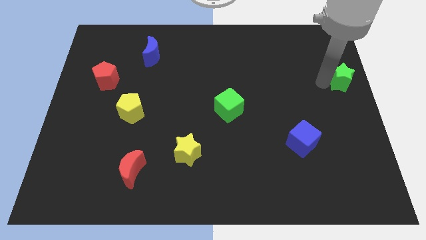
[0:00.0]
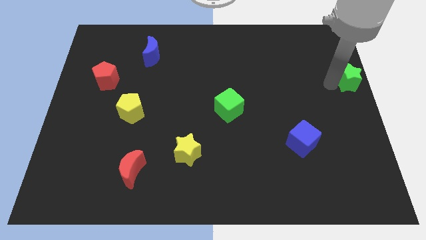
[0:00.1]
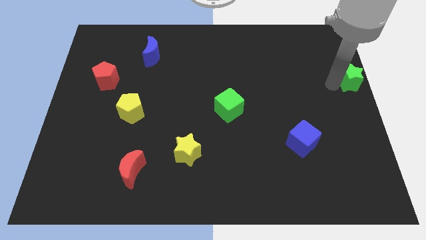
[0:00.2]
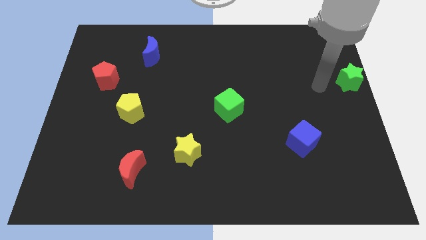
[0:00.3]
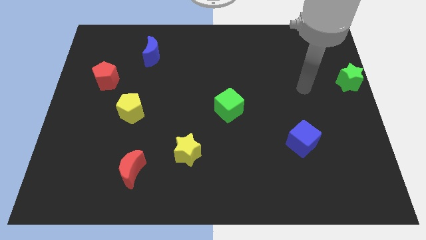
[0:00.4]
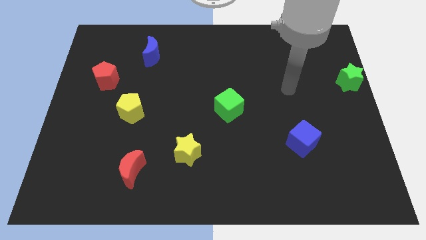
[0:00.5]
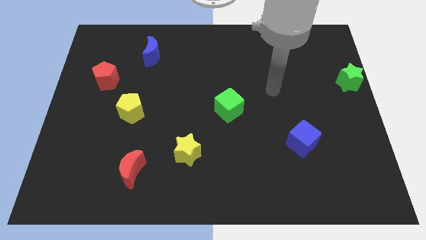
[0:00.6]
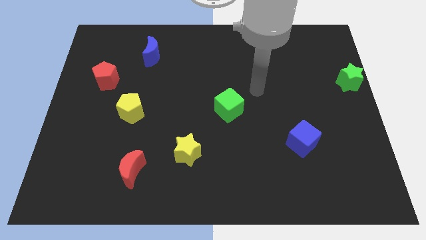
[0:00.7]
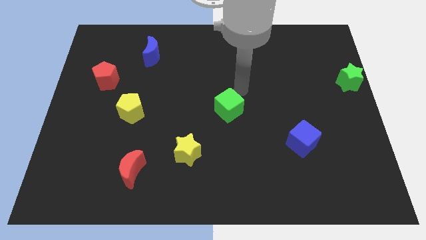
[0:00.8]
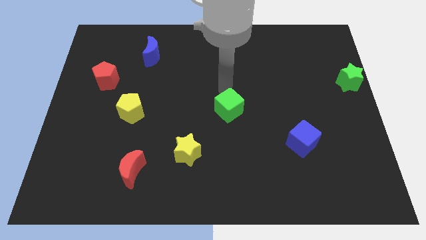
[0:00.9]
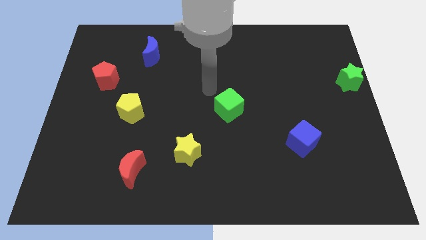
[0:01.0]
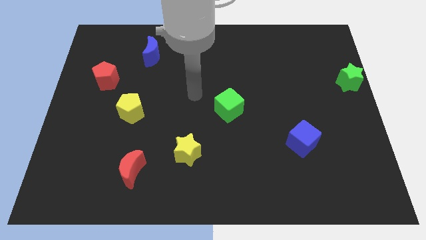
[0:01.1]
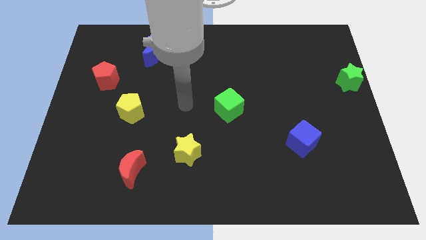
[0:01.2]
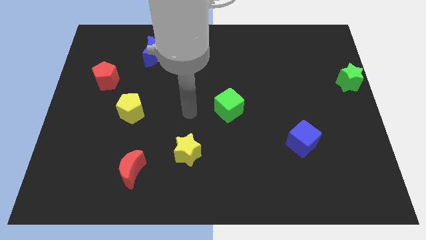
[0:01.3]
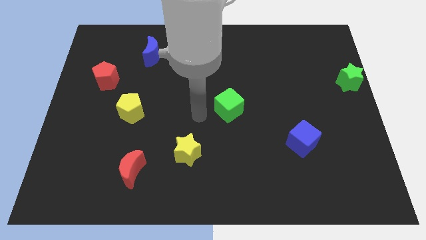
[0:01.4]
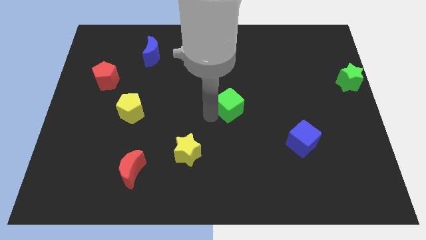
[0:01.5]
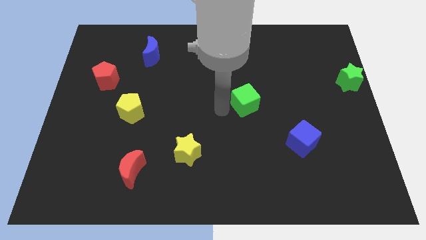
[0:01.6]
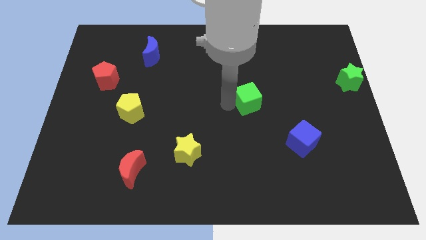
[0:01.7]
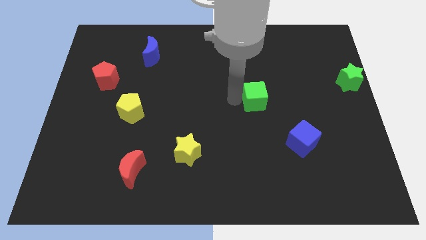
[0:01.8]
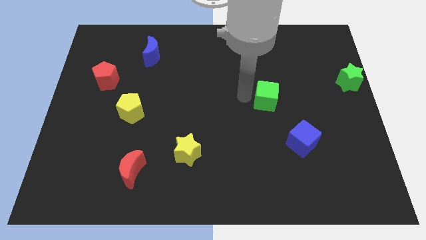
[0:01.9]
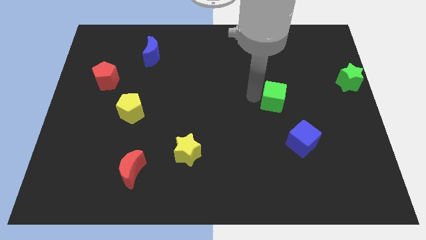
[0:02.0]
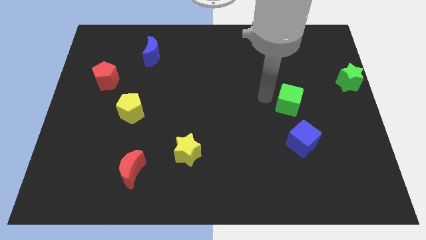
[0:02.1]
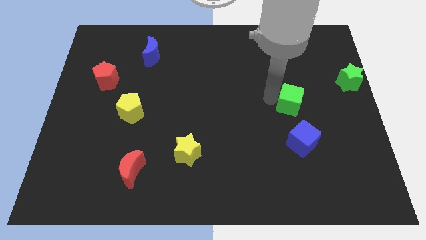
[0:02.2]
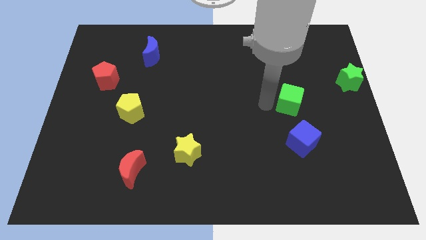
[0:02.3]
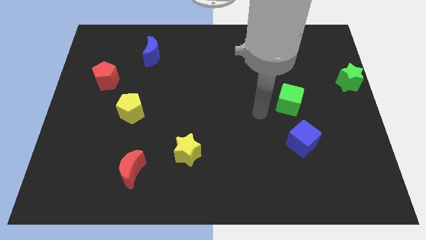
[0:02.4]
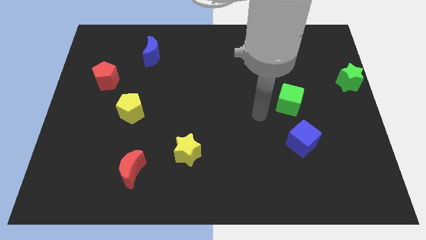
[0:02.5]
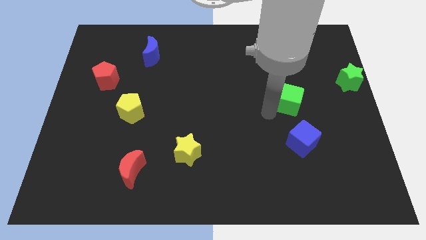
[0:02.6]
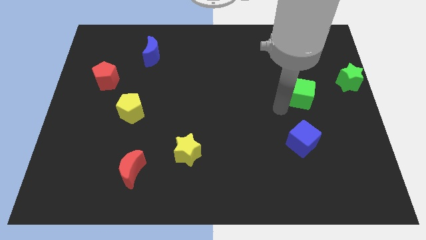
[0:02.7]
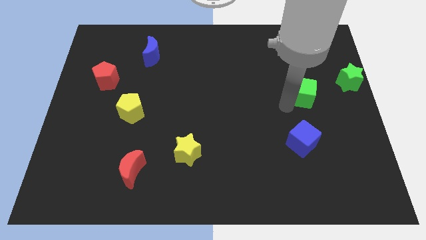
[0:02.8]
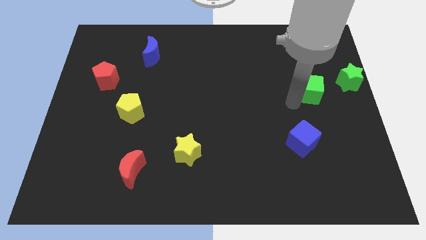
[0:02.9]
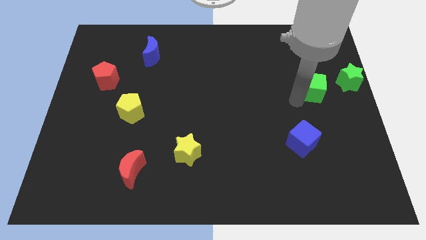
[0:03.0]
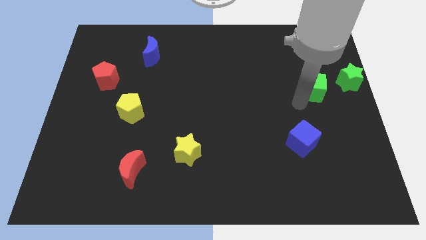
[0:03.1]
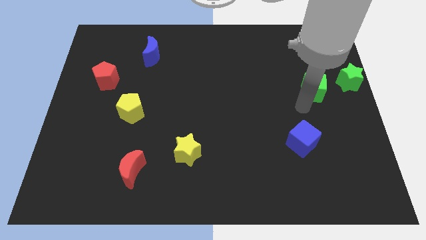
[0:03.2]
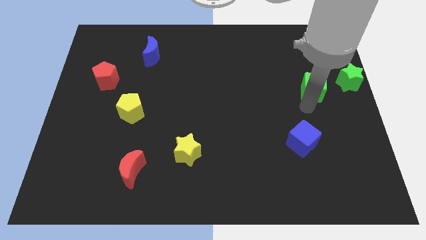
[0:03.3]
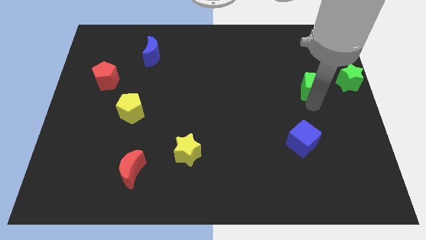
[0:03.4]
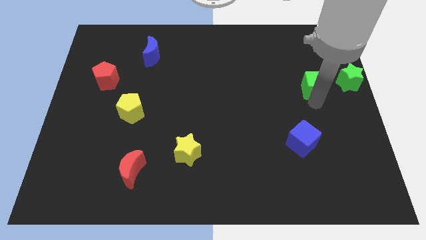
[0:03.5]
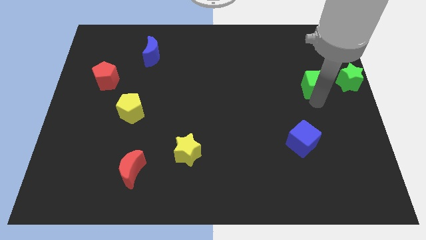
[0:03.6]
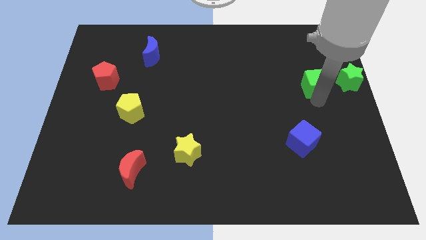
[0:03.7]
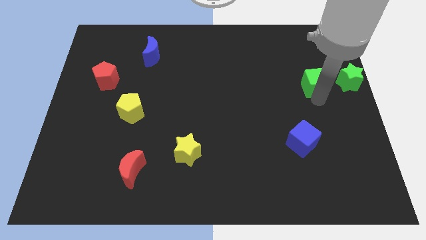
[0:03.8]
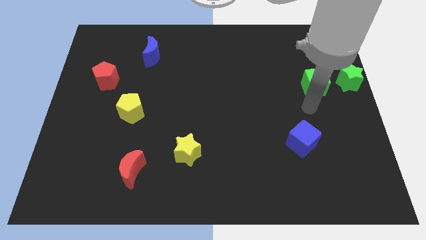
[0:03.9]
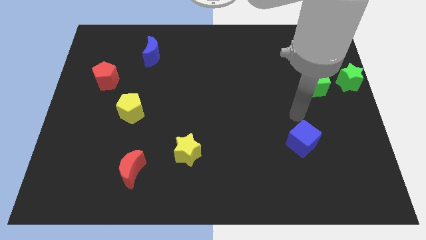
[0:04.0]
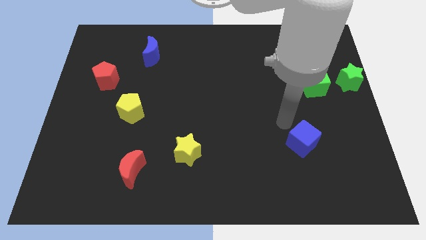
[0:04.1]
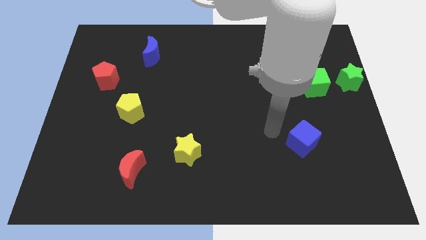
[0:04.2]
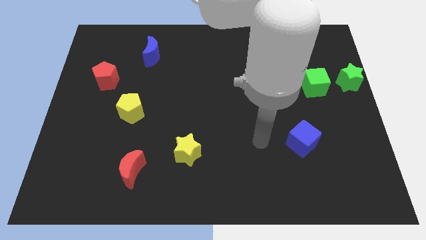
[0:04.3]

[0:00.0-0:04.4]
place the green cube to the left of green star

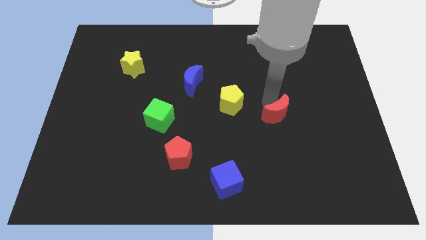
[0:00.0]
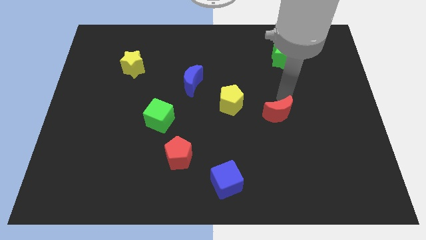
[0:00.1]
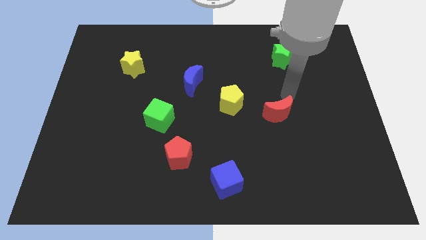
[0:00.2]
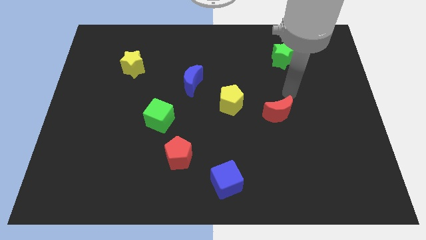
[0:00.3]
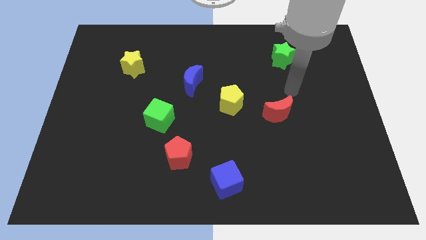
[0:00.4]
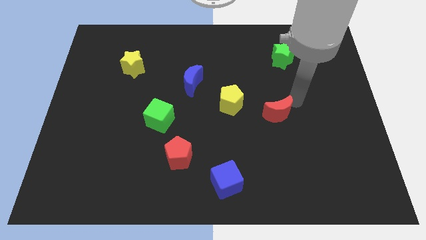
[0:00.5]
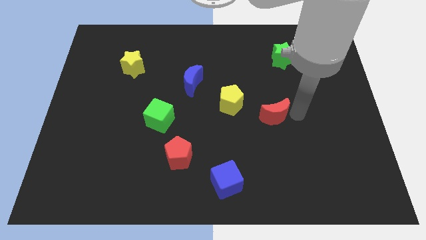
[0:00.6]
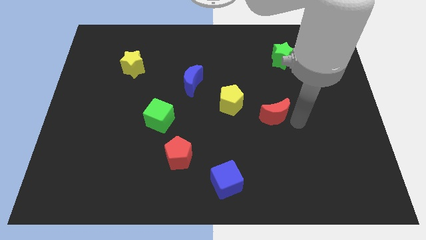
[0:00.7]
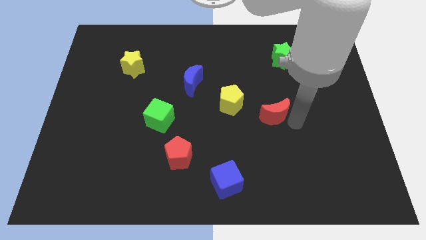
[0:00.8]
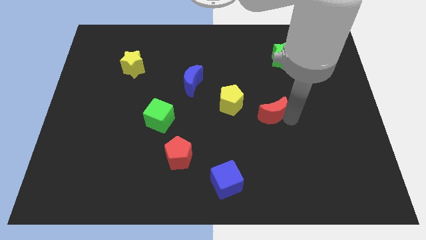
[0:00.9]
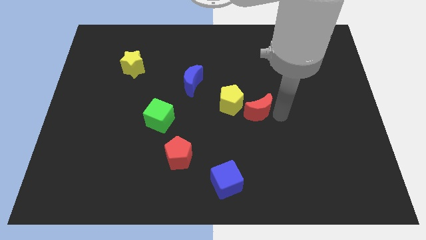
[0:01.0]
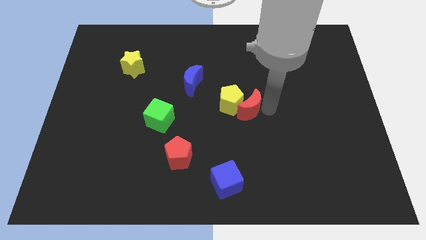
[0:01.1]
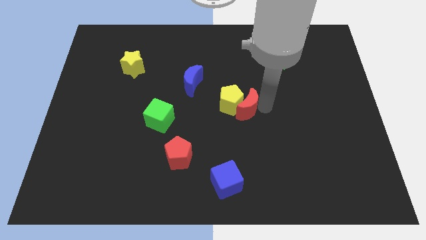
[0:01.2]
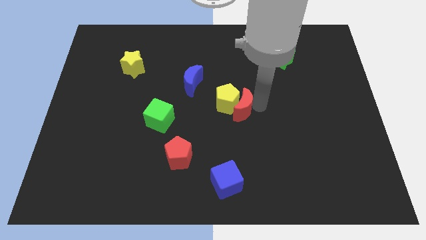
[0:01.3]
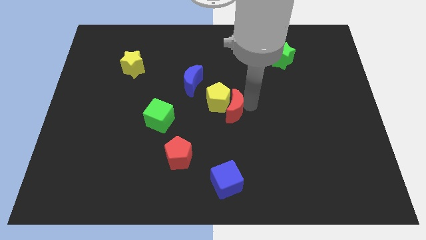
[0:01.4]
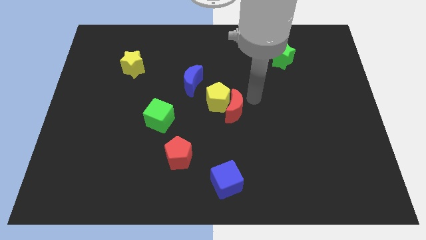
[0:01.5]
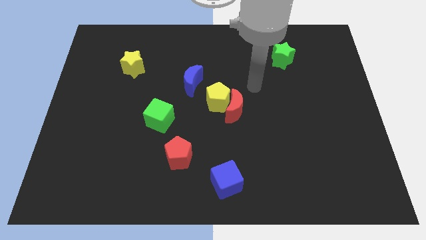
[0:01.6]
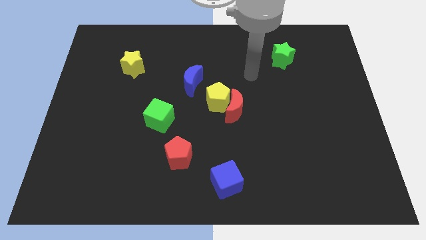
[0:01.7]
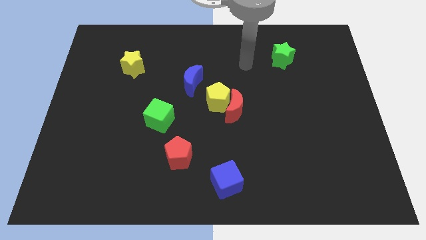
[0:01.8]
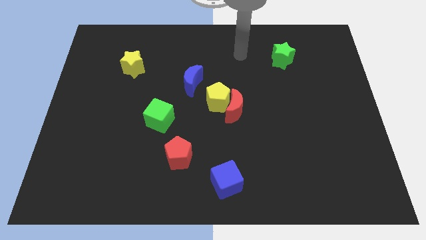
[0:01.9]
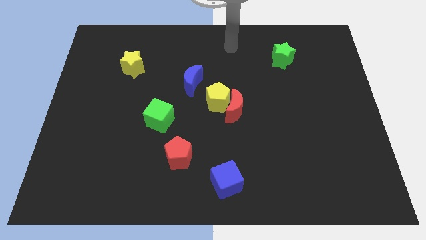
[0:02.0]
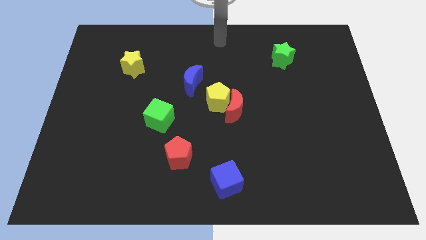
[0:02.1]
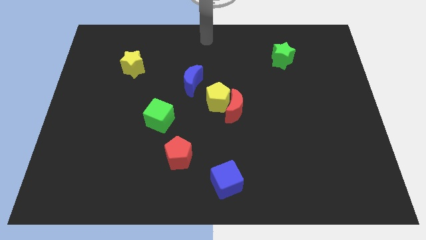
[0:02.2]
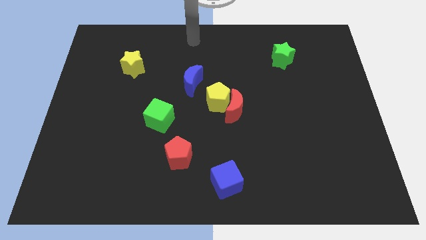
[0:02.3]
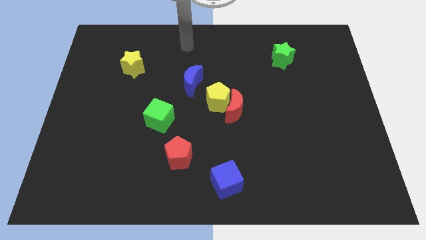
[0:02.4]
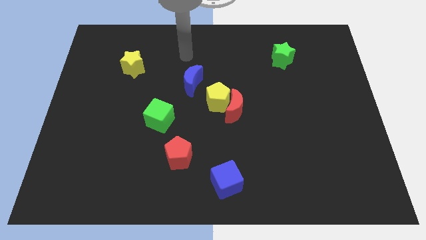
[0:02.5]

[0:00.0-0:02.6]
push the red moon into the yellow pentagon

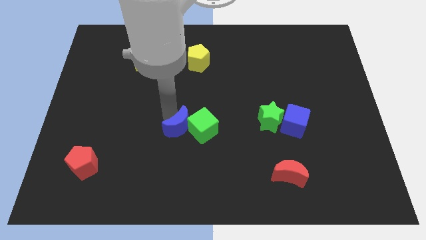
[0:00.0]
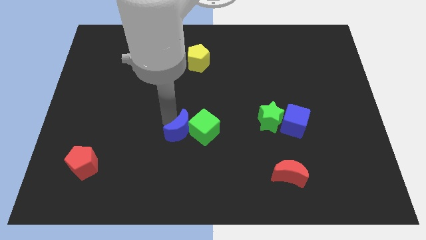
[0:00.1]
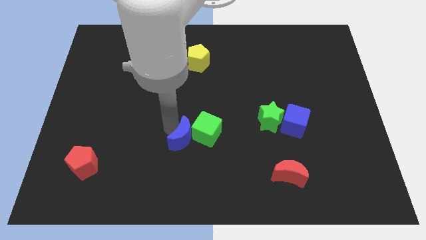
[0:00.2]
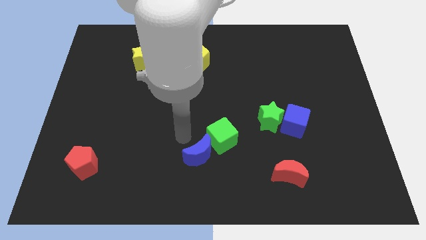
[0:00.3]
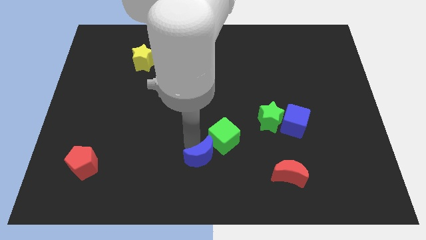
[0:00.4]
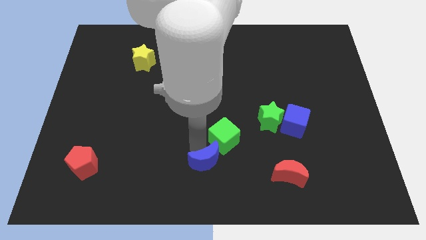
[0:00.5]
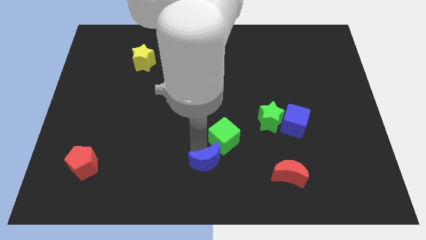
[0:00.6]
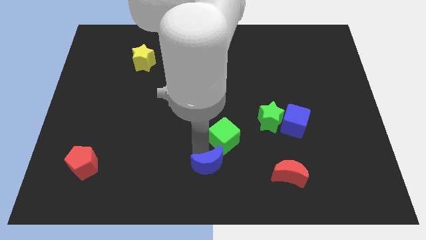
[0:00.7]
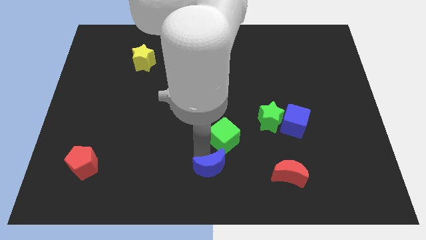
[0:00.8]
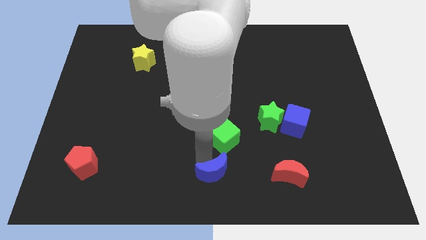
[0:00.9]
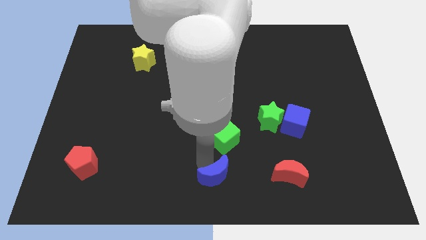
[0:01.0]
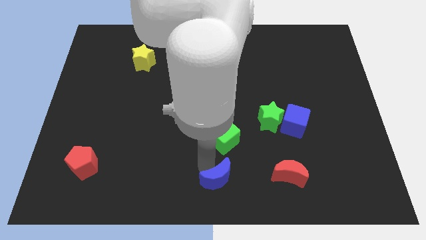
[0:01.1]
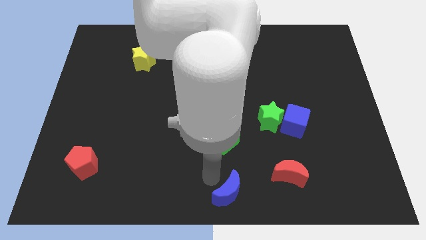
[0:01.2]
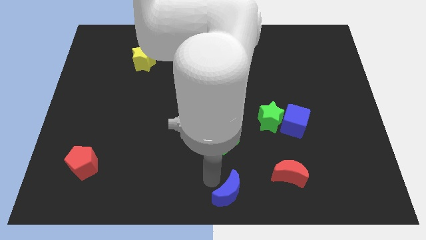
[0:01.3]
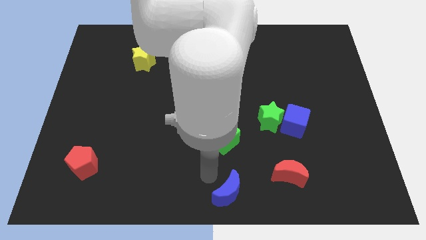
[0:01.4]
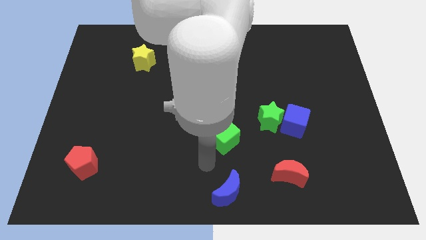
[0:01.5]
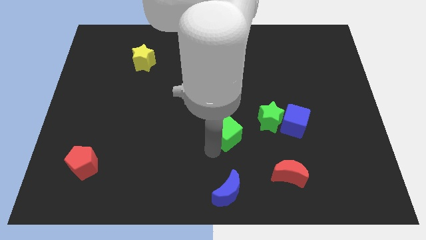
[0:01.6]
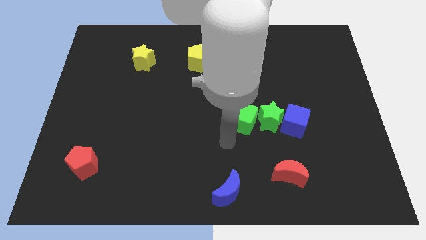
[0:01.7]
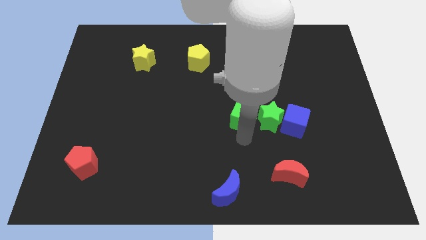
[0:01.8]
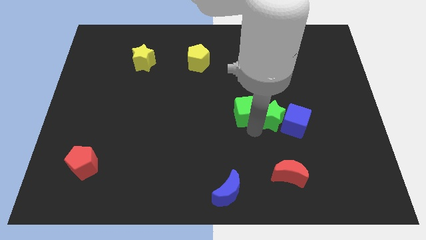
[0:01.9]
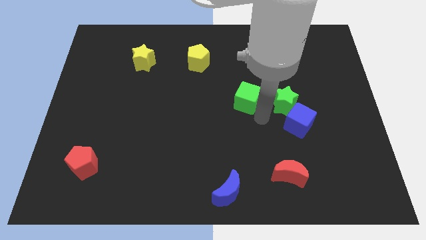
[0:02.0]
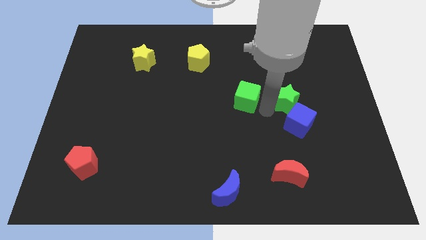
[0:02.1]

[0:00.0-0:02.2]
move the blue moon to the downwards
